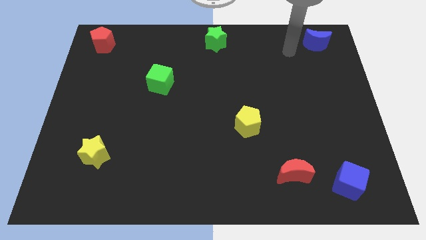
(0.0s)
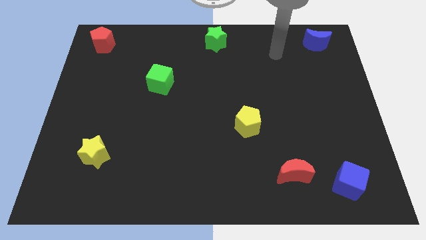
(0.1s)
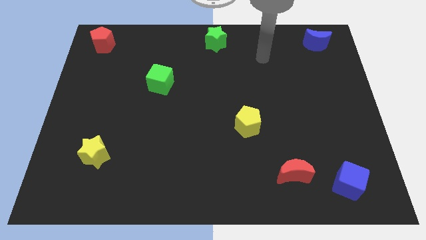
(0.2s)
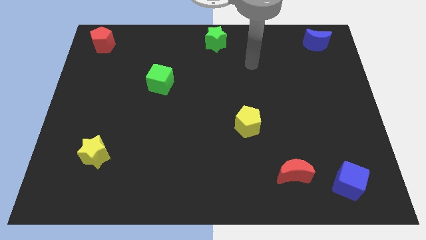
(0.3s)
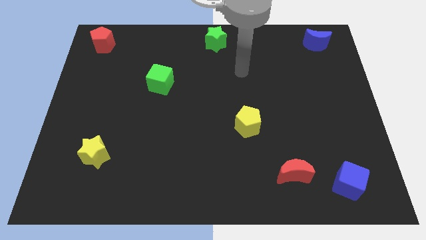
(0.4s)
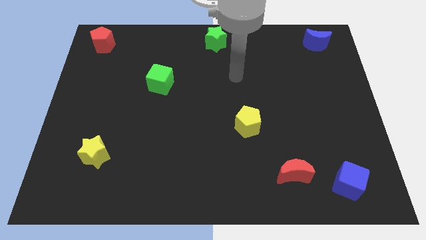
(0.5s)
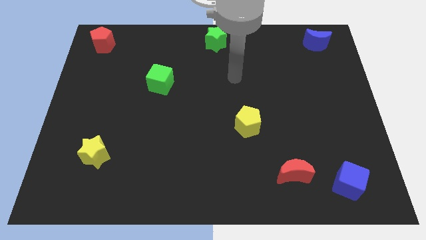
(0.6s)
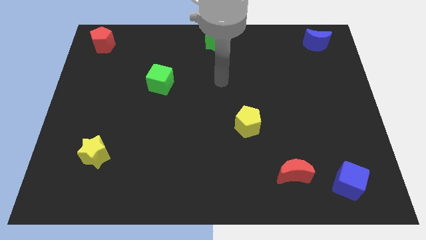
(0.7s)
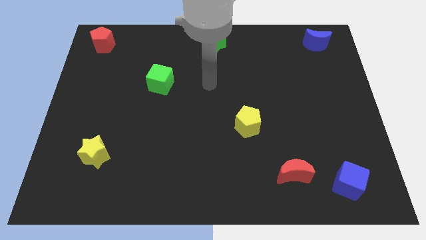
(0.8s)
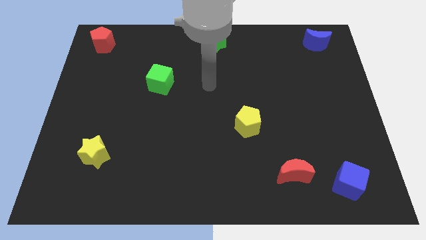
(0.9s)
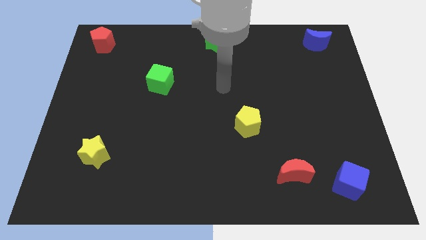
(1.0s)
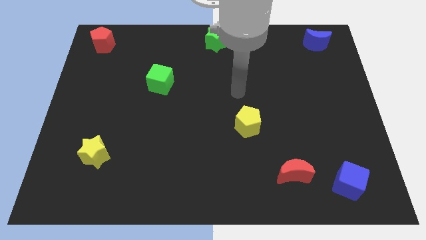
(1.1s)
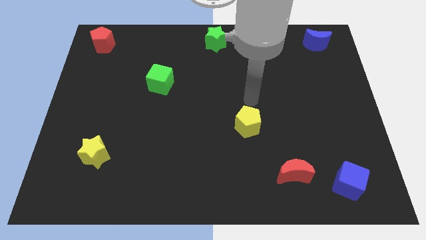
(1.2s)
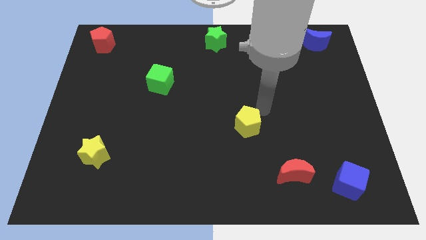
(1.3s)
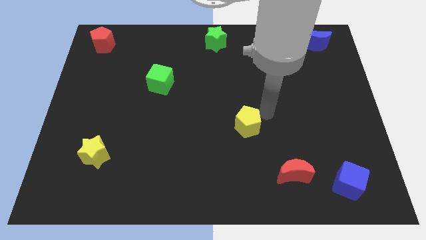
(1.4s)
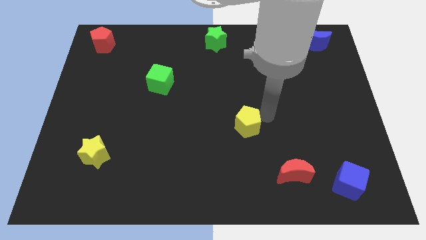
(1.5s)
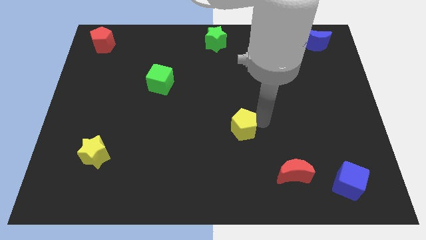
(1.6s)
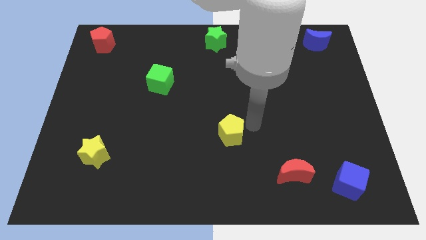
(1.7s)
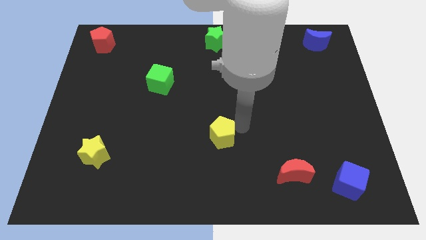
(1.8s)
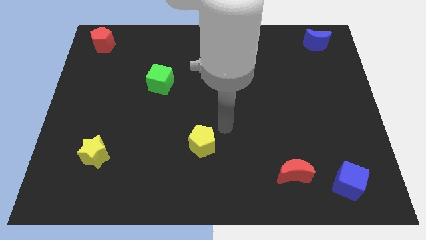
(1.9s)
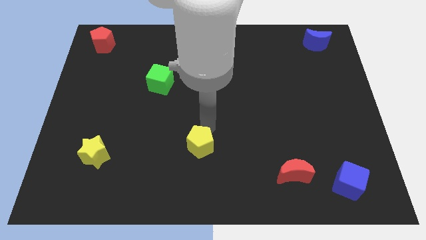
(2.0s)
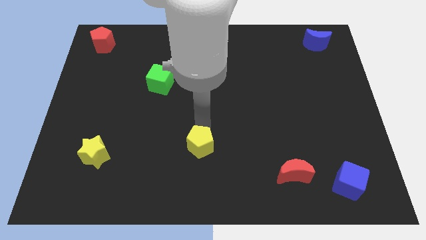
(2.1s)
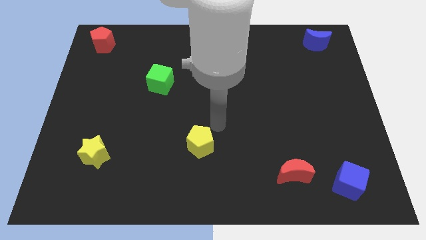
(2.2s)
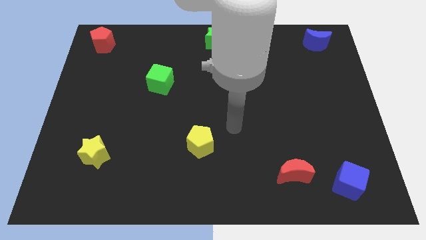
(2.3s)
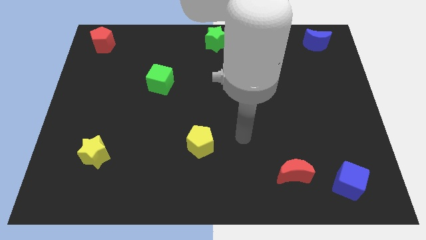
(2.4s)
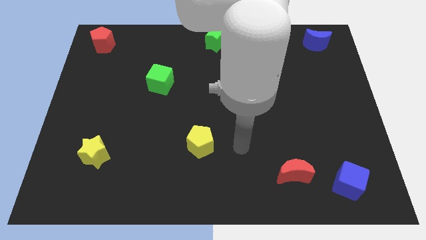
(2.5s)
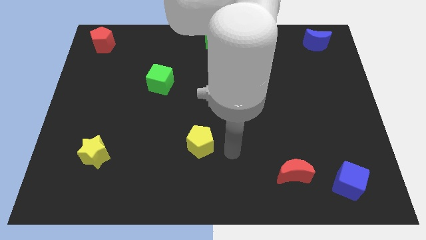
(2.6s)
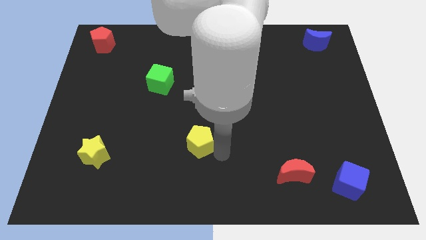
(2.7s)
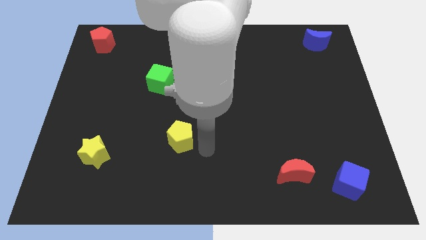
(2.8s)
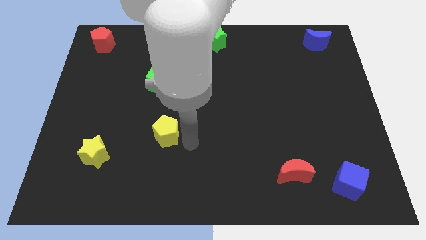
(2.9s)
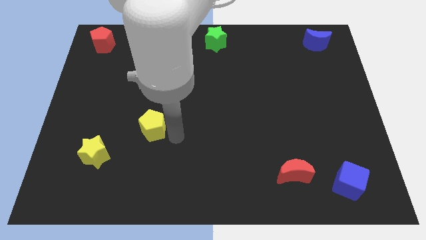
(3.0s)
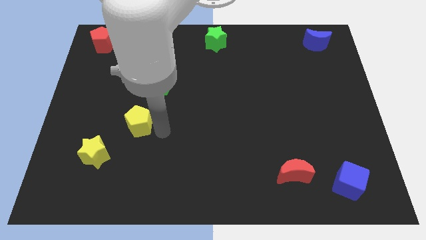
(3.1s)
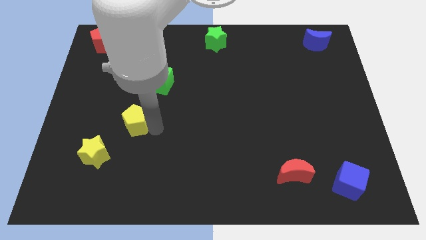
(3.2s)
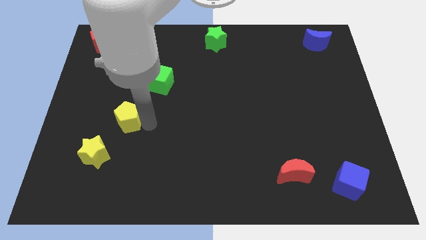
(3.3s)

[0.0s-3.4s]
drag yellow pentagon towards left side of the board

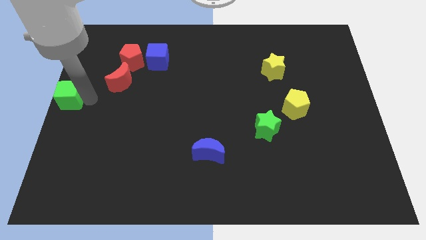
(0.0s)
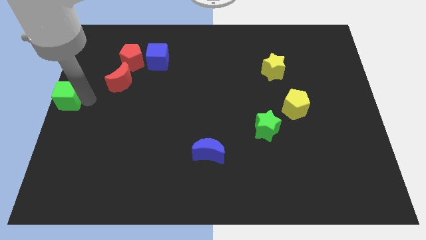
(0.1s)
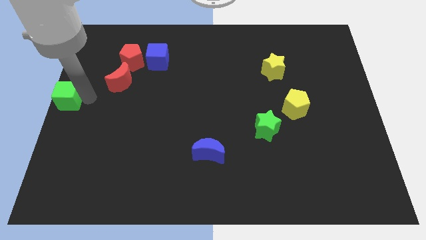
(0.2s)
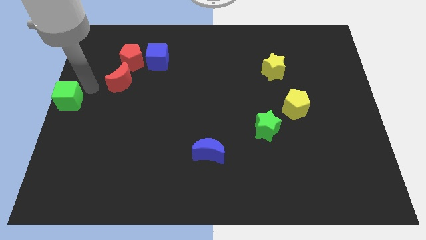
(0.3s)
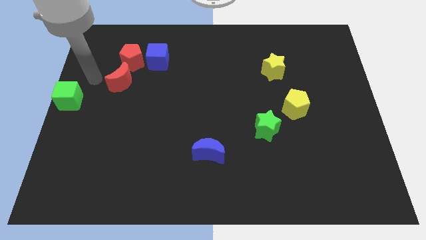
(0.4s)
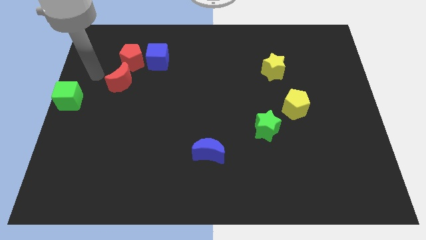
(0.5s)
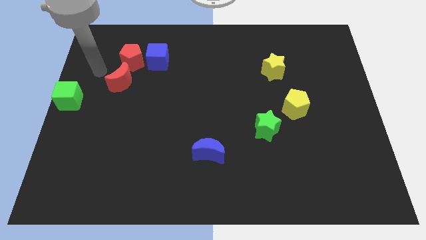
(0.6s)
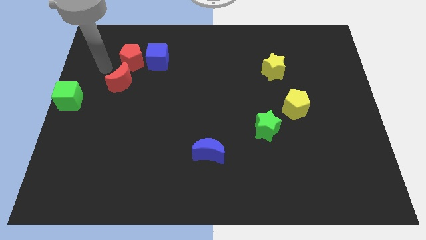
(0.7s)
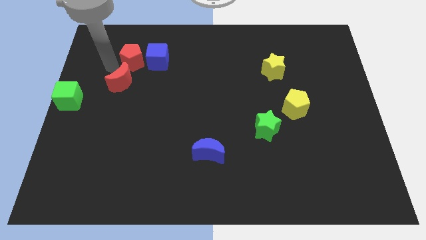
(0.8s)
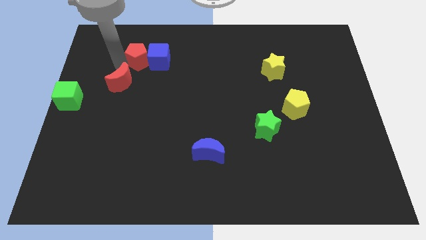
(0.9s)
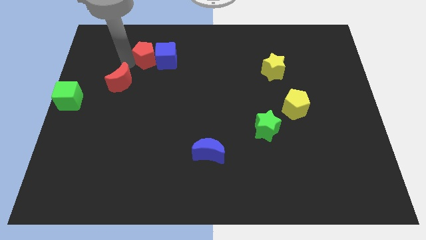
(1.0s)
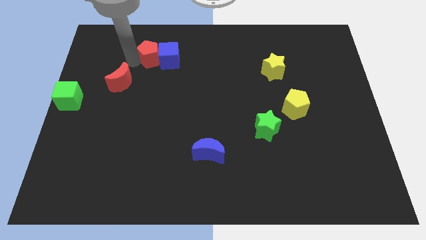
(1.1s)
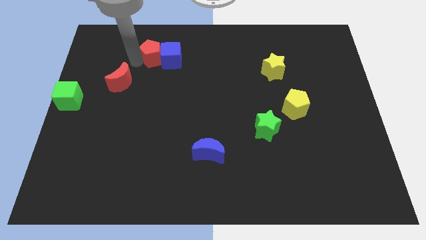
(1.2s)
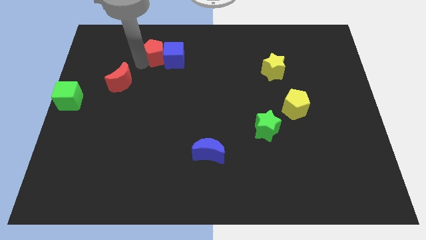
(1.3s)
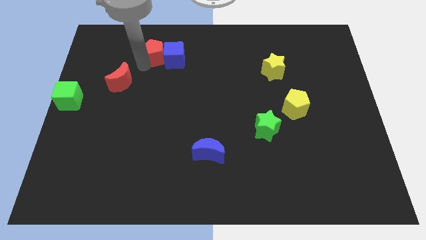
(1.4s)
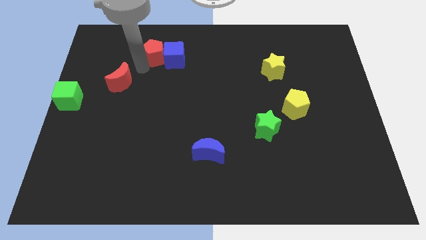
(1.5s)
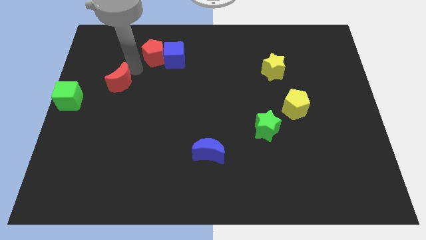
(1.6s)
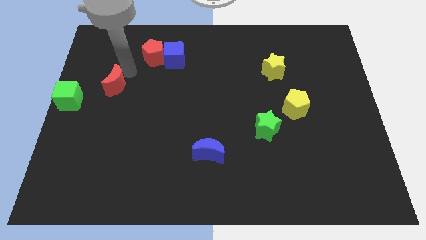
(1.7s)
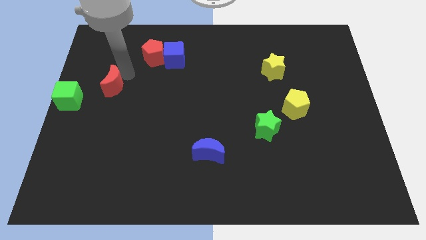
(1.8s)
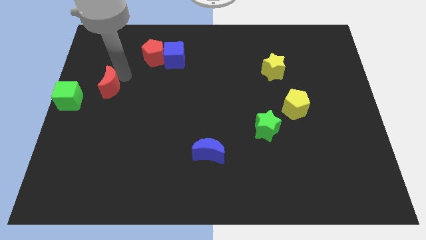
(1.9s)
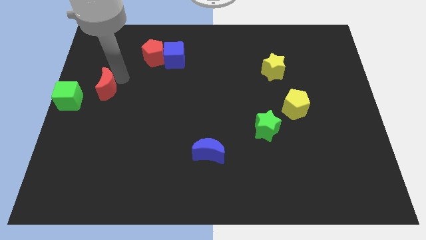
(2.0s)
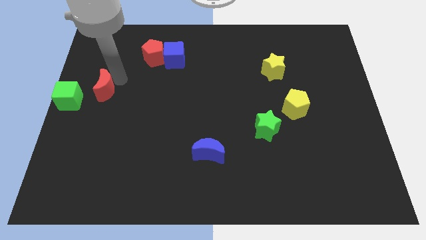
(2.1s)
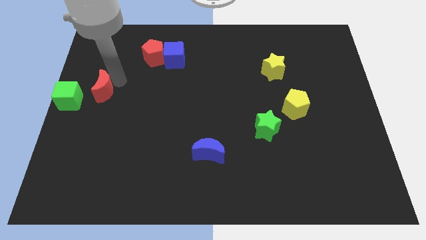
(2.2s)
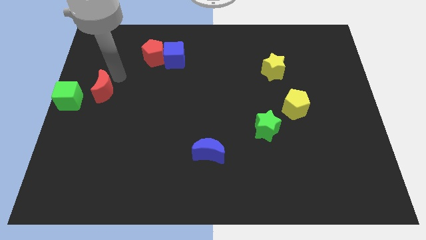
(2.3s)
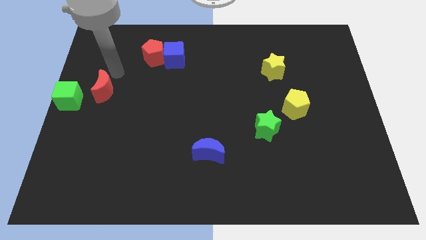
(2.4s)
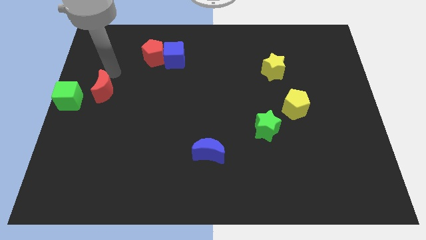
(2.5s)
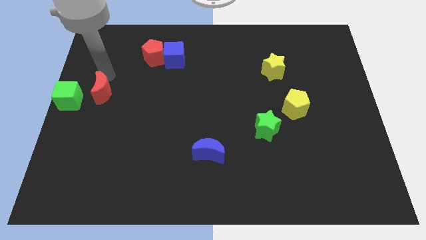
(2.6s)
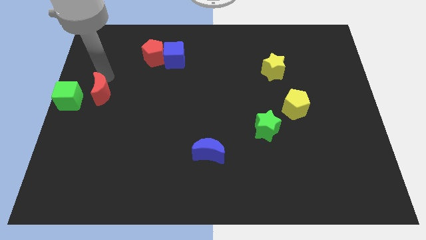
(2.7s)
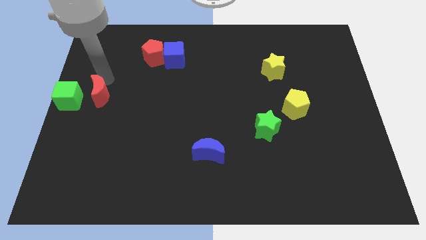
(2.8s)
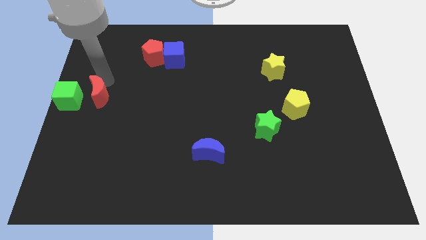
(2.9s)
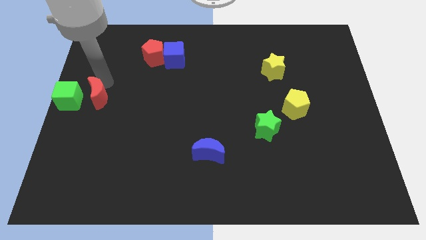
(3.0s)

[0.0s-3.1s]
move the red pentagon and blue cube slightly right

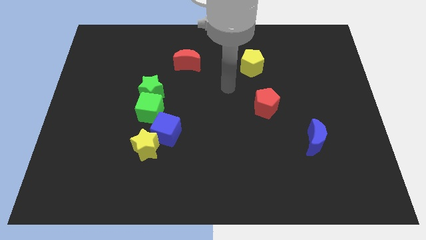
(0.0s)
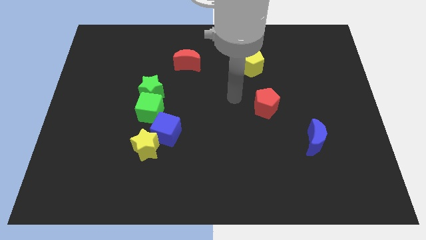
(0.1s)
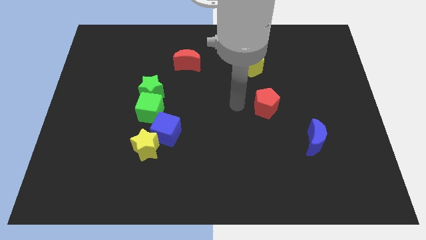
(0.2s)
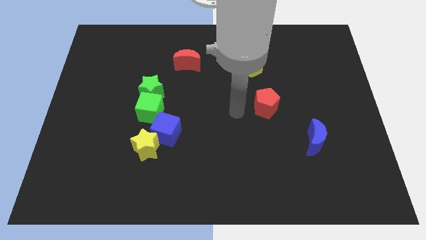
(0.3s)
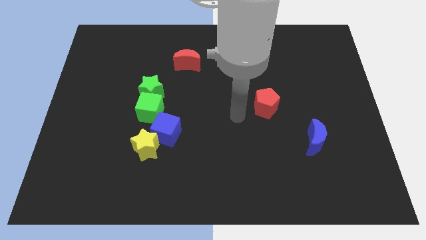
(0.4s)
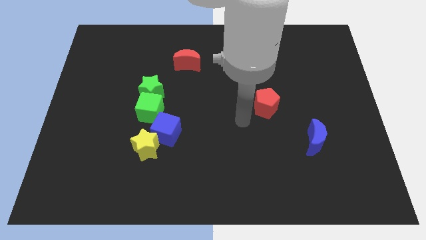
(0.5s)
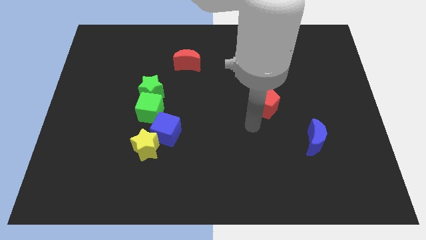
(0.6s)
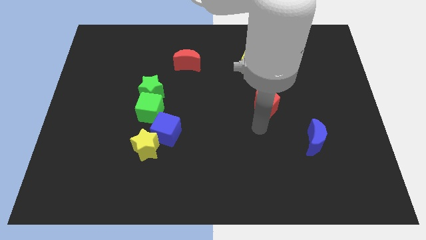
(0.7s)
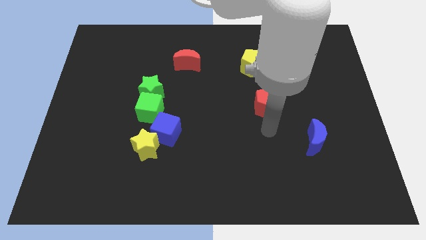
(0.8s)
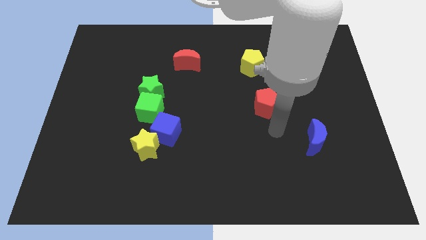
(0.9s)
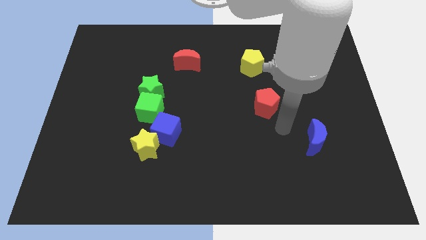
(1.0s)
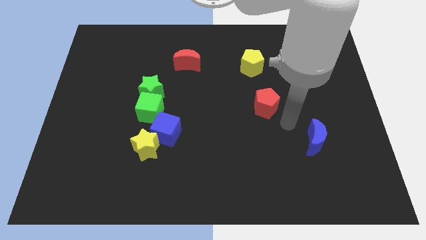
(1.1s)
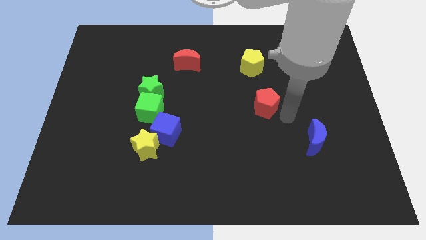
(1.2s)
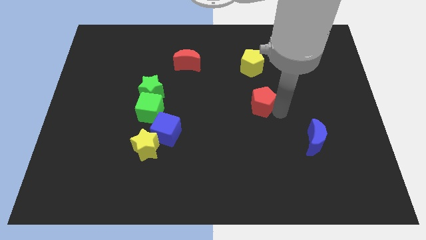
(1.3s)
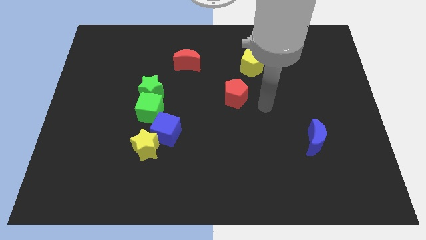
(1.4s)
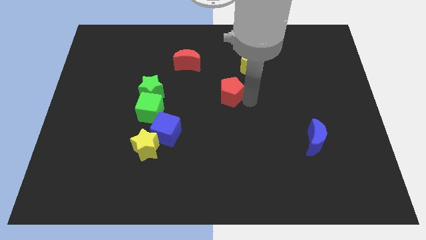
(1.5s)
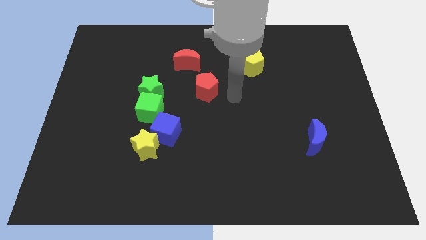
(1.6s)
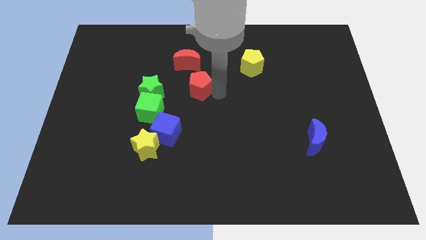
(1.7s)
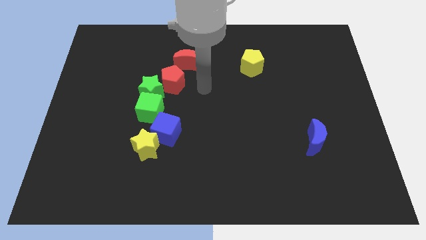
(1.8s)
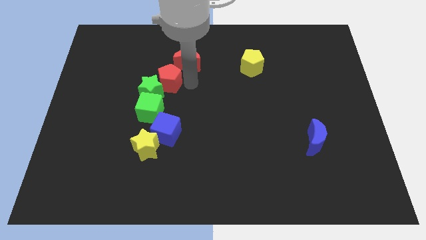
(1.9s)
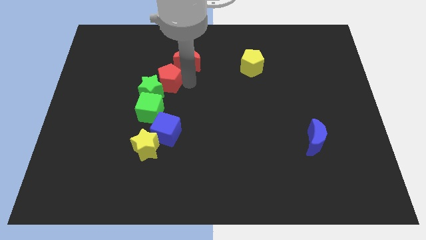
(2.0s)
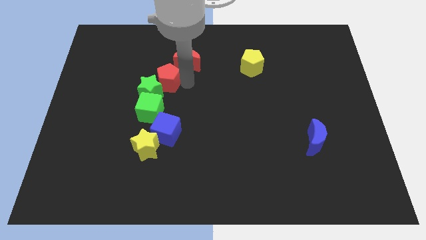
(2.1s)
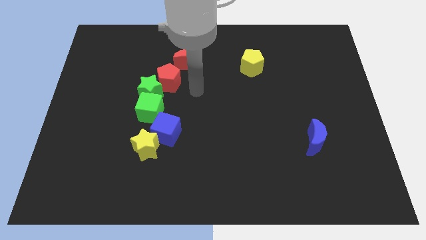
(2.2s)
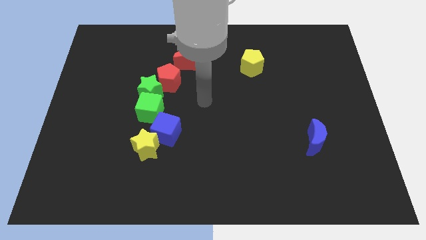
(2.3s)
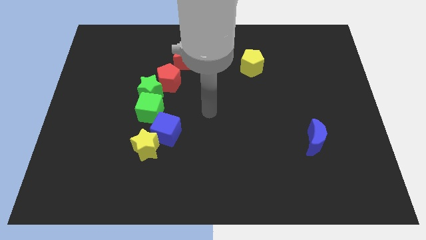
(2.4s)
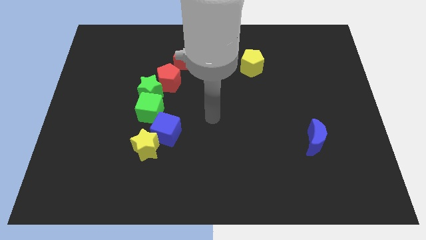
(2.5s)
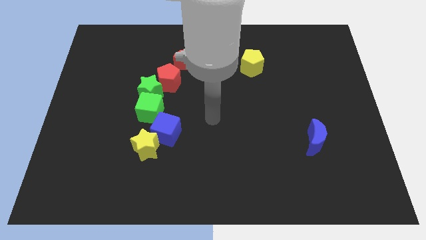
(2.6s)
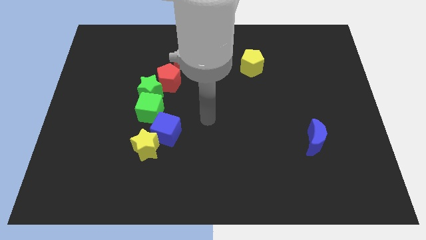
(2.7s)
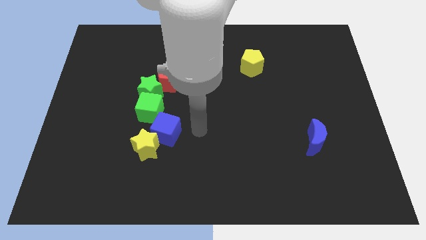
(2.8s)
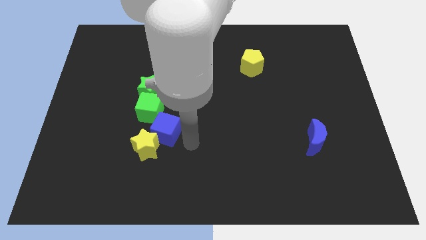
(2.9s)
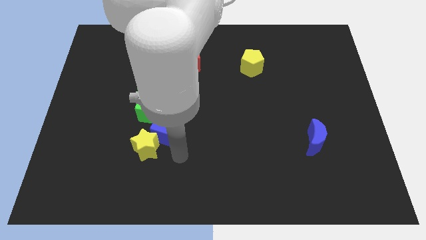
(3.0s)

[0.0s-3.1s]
move the red pentagon in between the red moon and green star
